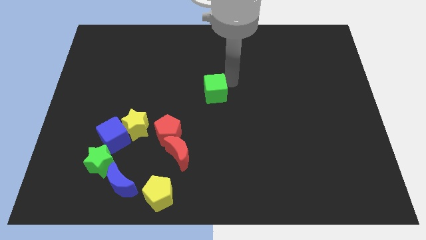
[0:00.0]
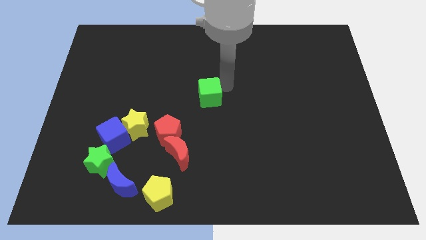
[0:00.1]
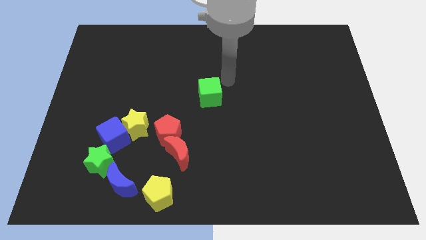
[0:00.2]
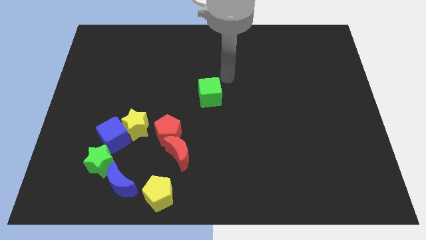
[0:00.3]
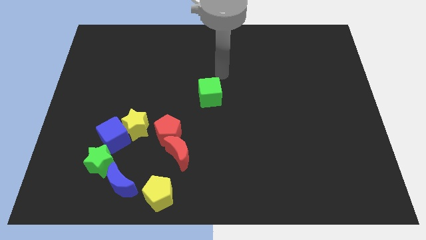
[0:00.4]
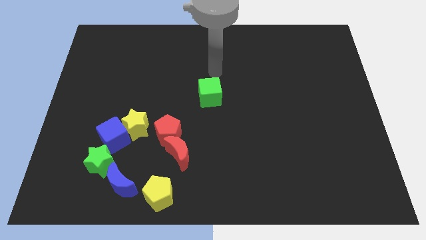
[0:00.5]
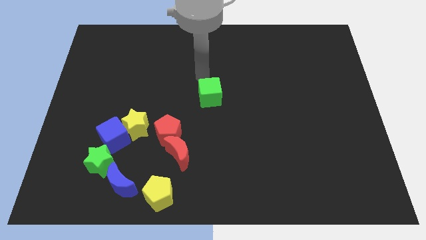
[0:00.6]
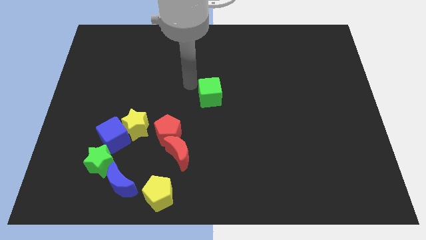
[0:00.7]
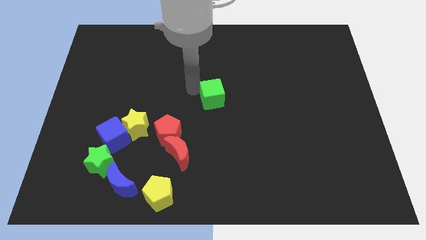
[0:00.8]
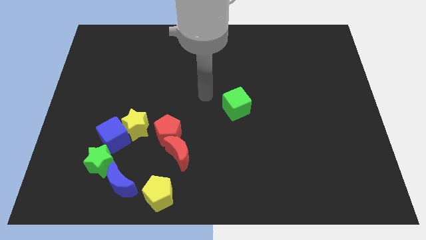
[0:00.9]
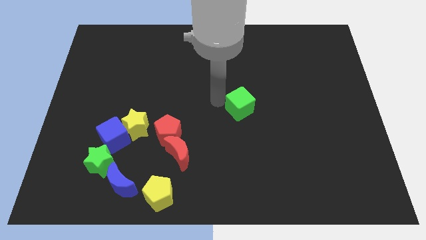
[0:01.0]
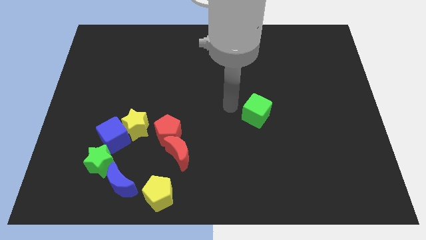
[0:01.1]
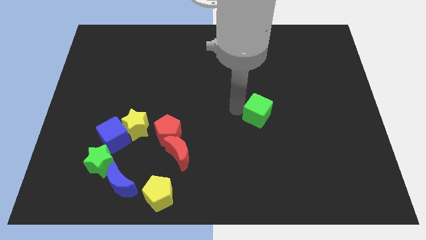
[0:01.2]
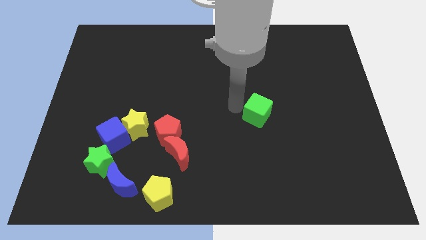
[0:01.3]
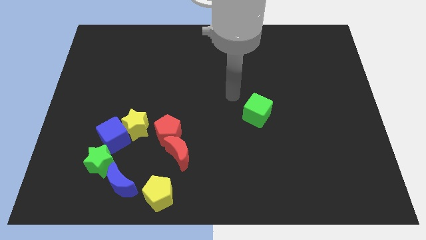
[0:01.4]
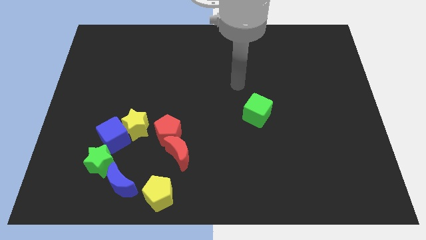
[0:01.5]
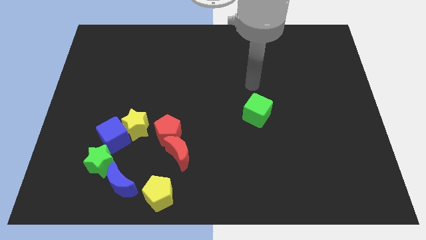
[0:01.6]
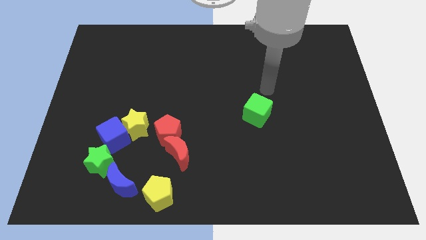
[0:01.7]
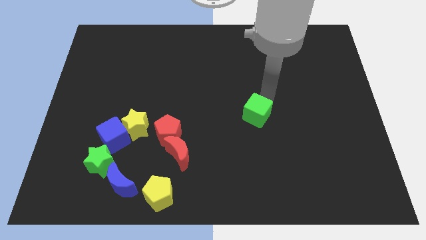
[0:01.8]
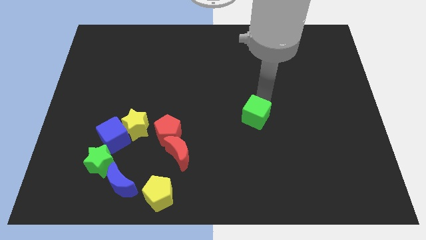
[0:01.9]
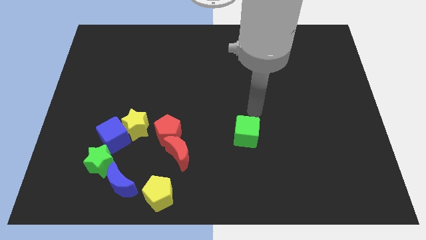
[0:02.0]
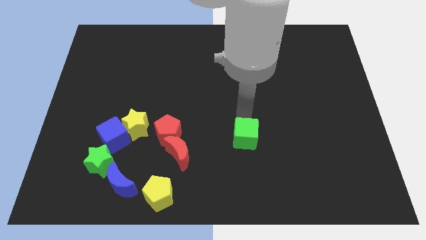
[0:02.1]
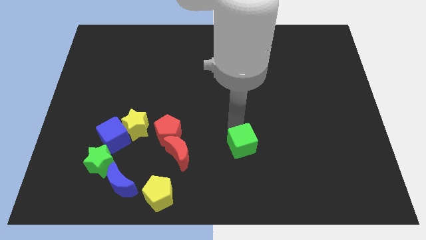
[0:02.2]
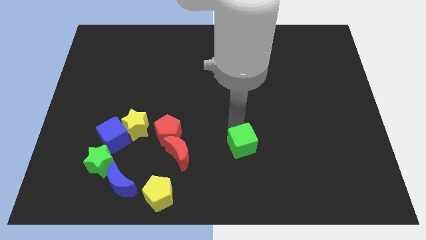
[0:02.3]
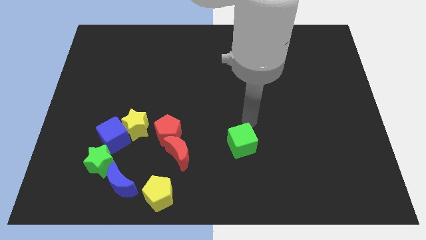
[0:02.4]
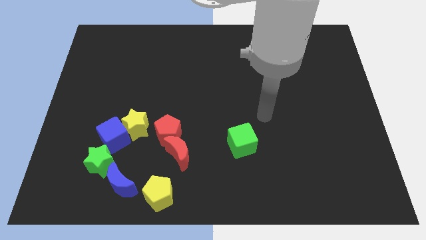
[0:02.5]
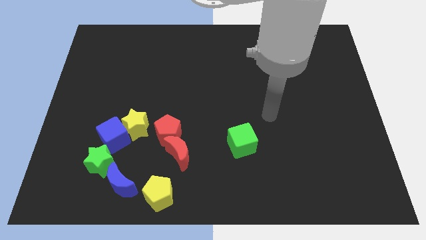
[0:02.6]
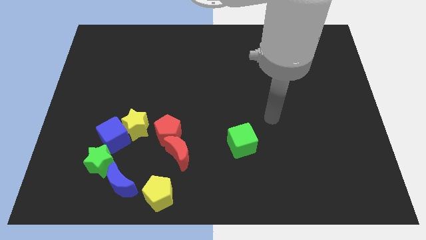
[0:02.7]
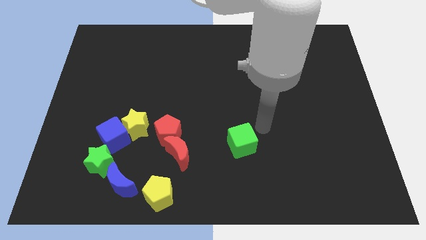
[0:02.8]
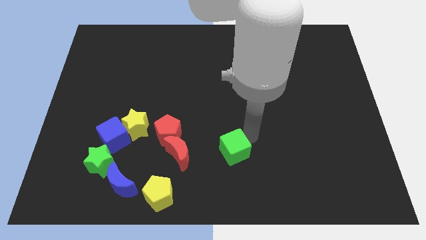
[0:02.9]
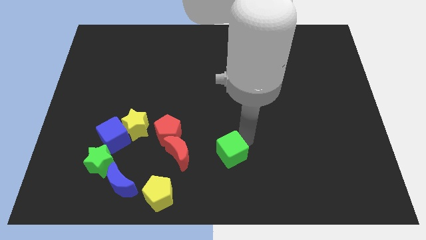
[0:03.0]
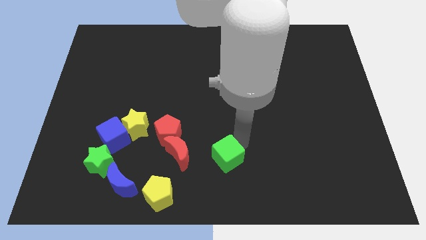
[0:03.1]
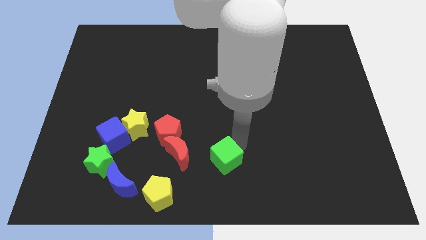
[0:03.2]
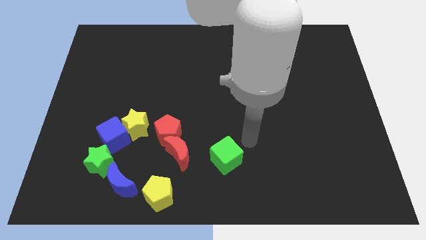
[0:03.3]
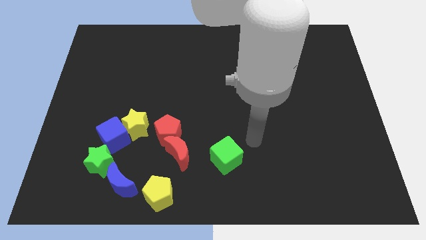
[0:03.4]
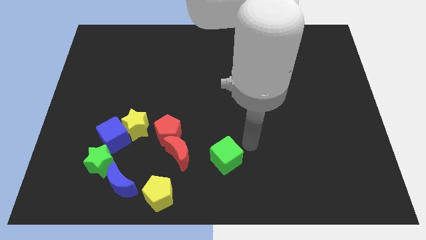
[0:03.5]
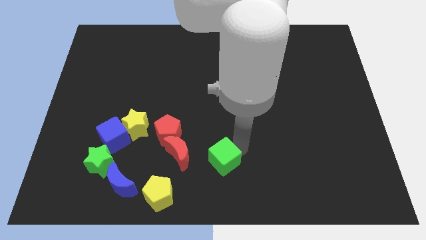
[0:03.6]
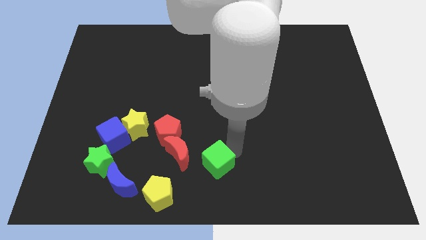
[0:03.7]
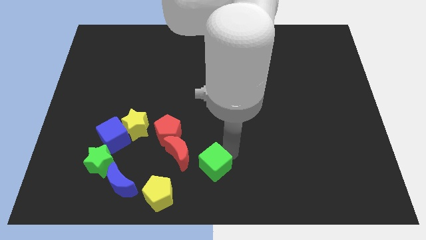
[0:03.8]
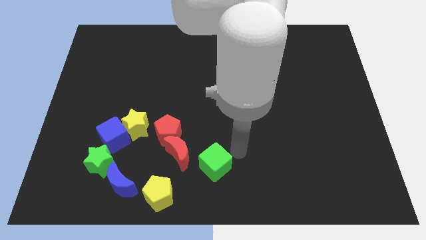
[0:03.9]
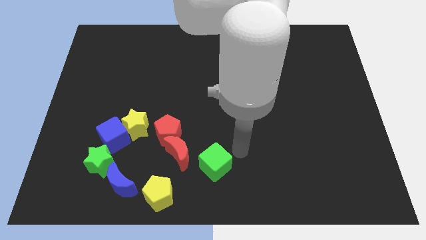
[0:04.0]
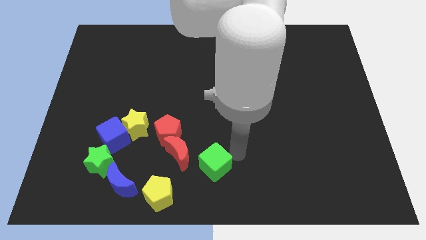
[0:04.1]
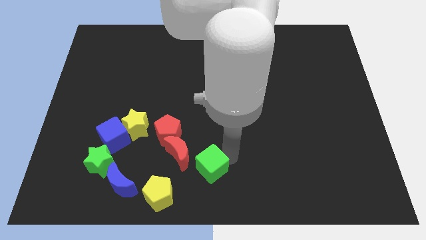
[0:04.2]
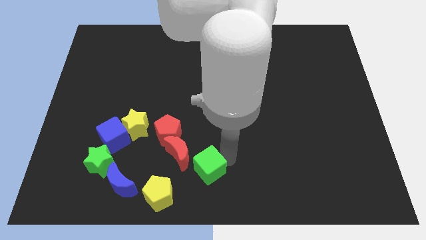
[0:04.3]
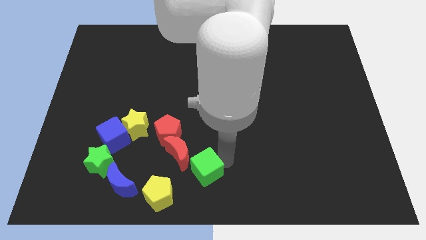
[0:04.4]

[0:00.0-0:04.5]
place the green cube to the bottom right side of the red moon

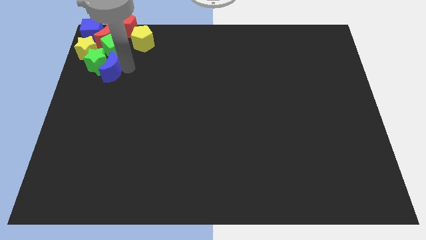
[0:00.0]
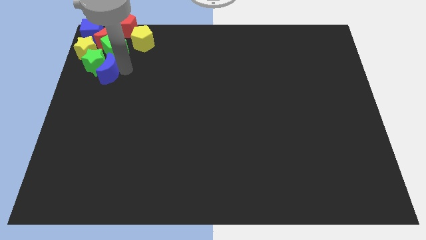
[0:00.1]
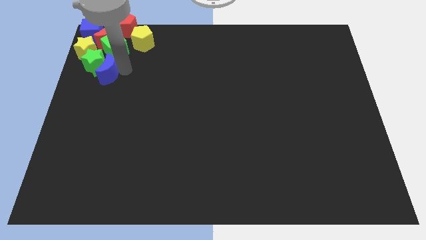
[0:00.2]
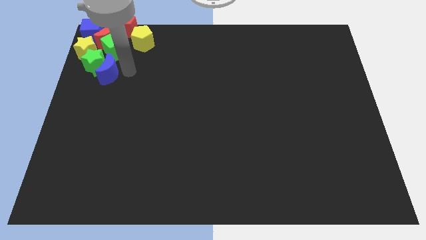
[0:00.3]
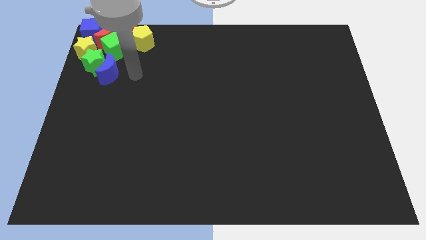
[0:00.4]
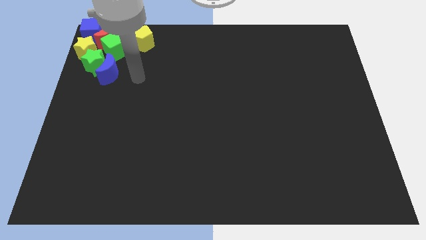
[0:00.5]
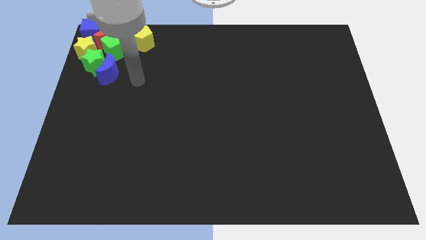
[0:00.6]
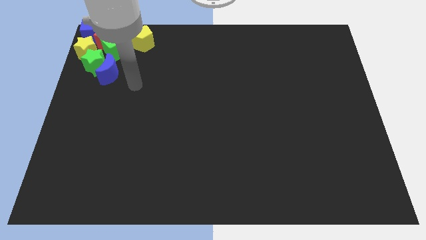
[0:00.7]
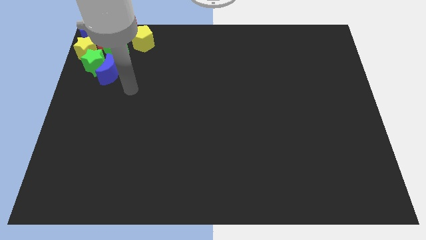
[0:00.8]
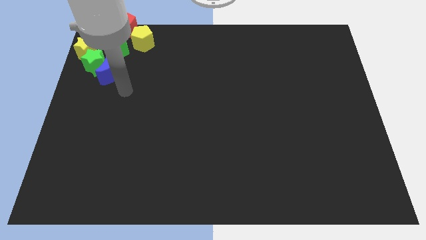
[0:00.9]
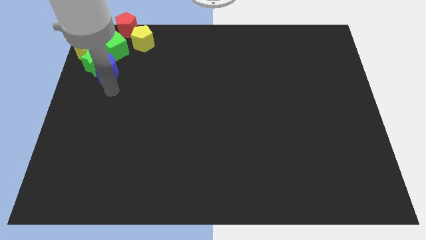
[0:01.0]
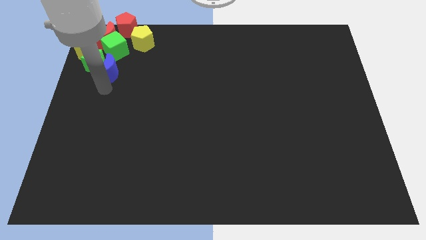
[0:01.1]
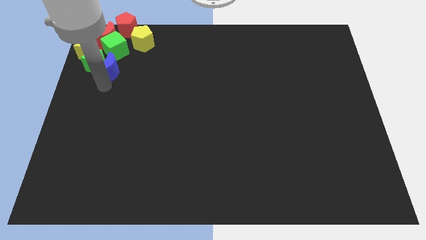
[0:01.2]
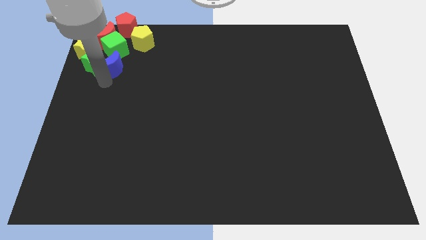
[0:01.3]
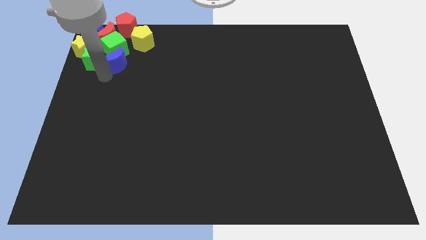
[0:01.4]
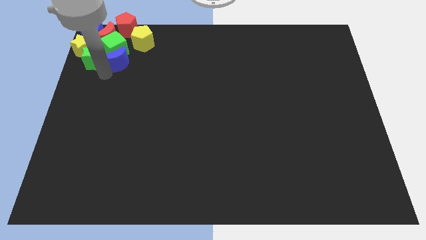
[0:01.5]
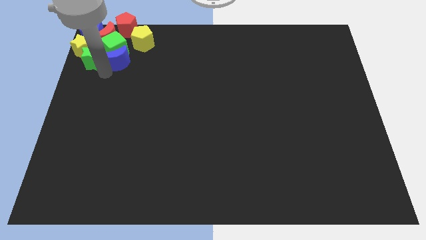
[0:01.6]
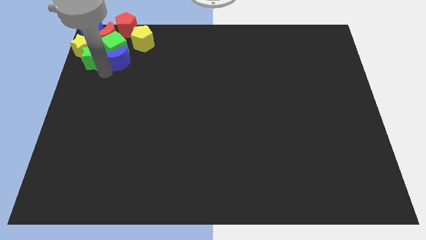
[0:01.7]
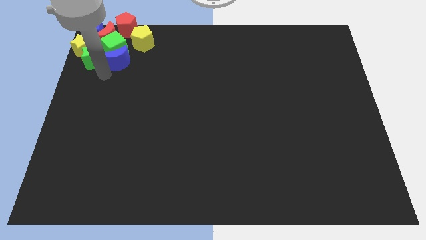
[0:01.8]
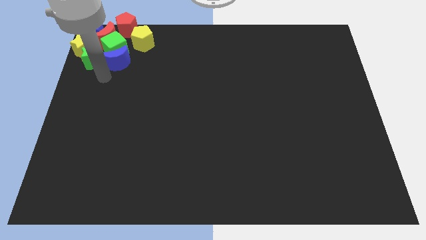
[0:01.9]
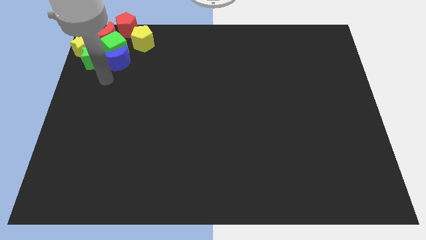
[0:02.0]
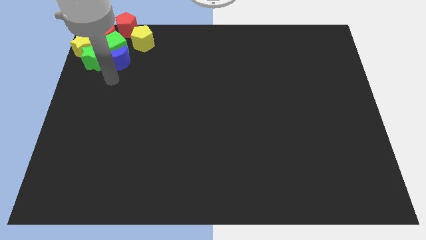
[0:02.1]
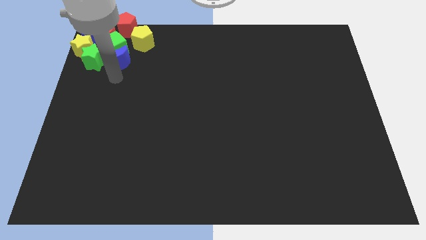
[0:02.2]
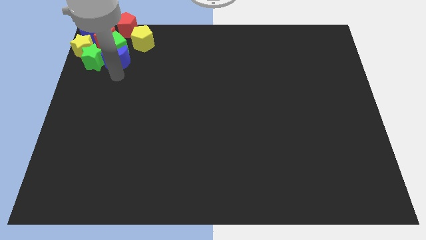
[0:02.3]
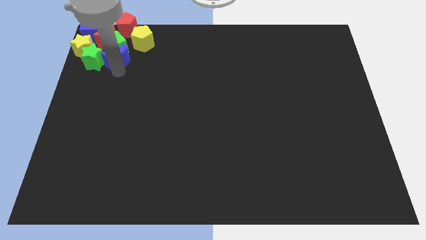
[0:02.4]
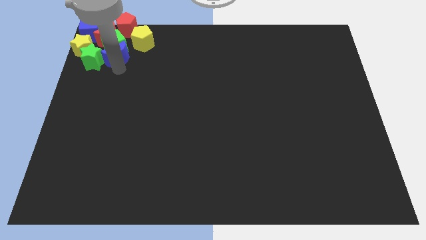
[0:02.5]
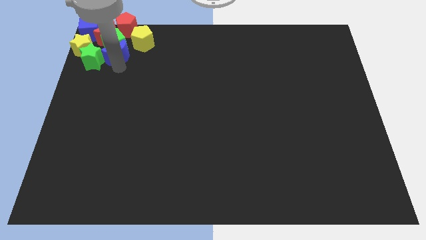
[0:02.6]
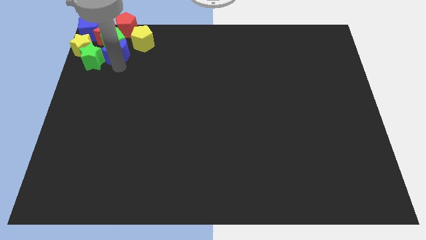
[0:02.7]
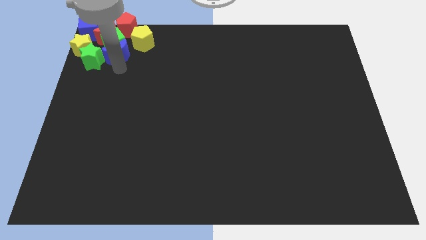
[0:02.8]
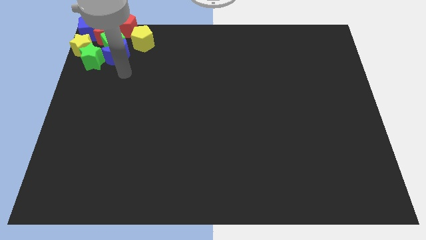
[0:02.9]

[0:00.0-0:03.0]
move the blue moon down to the green cube

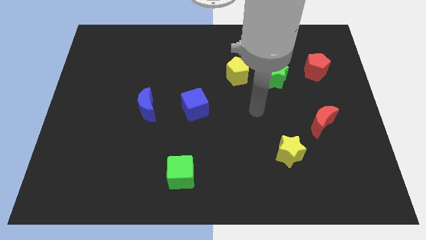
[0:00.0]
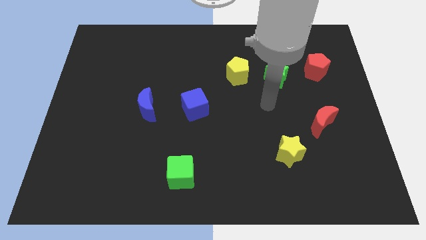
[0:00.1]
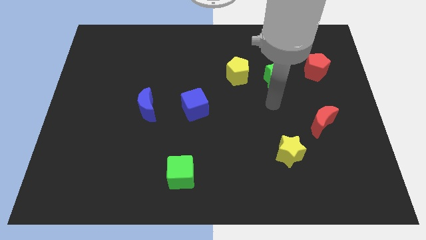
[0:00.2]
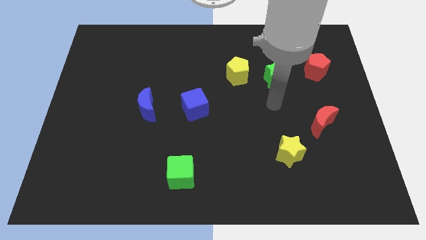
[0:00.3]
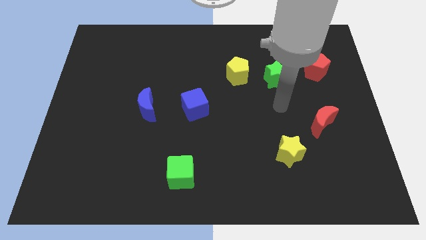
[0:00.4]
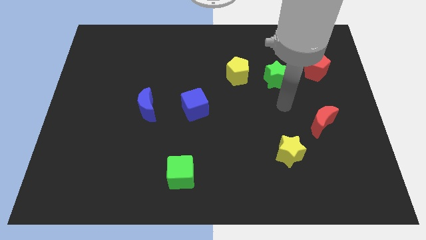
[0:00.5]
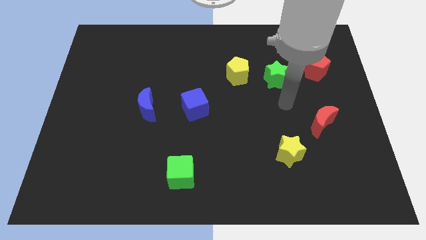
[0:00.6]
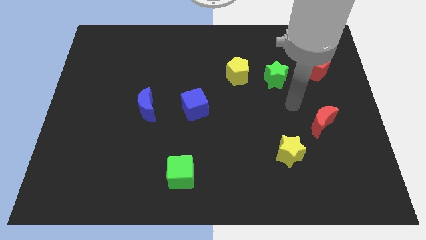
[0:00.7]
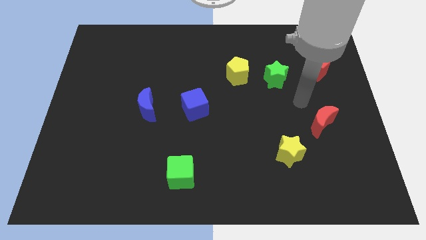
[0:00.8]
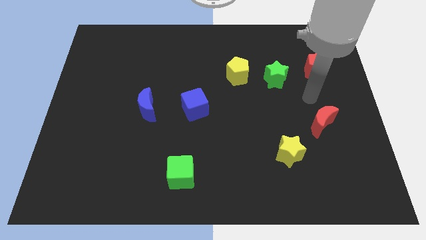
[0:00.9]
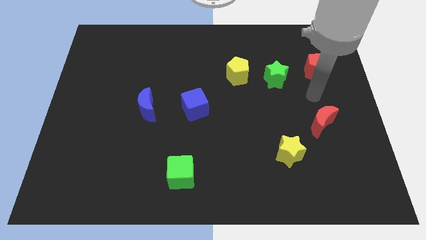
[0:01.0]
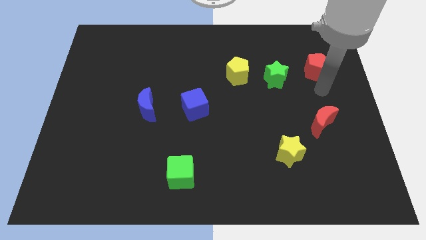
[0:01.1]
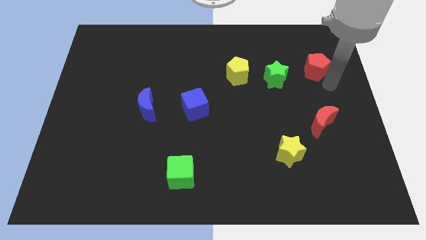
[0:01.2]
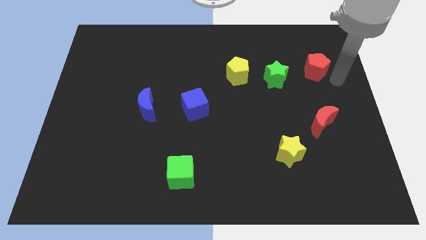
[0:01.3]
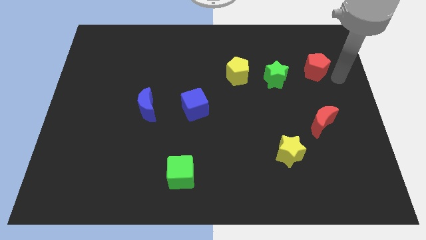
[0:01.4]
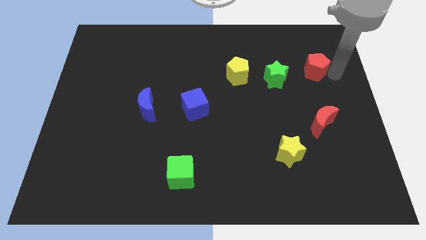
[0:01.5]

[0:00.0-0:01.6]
place the arm diagonally to the red pentagon

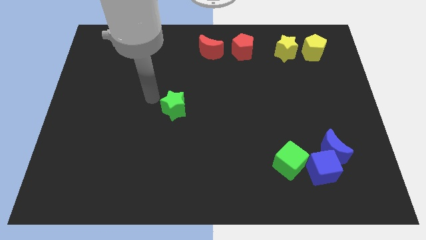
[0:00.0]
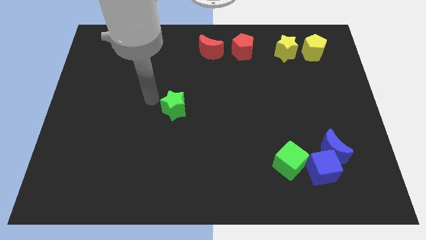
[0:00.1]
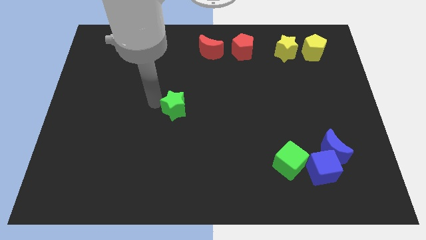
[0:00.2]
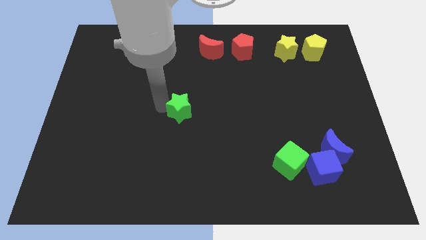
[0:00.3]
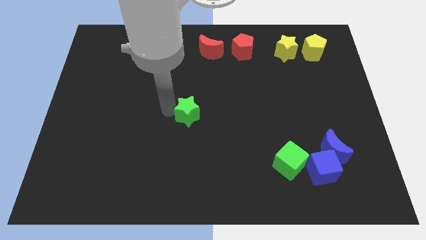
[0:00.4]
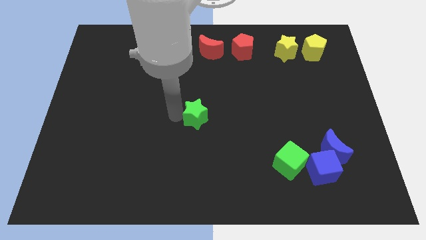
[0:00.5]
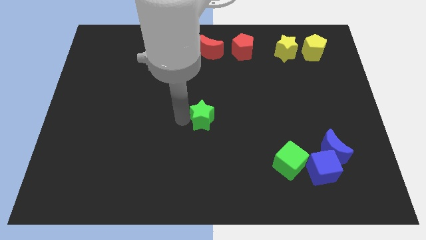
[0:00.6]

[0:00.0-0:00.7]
push the green star slightly to the right
